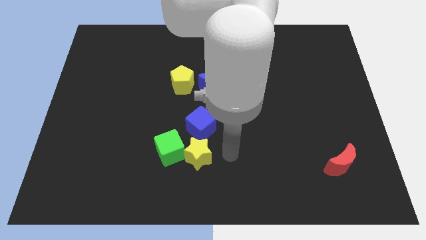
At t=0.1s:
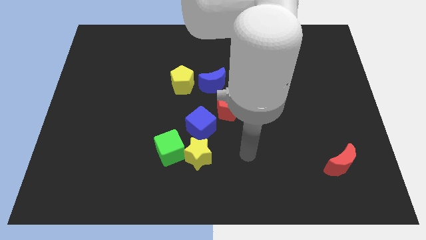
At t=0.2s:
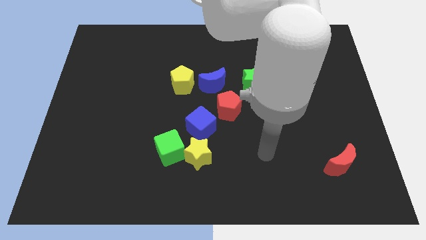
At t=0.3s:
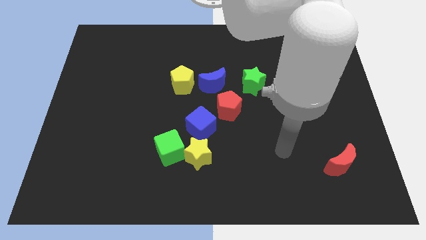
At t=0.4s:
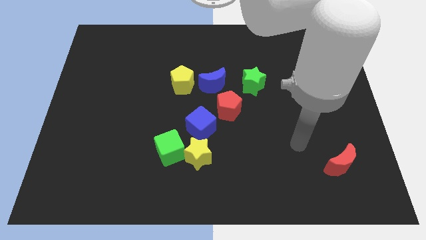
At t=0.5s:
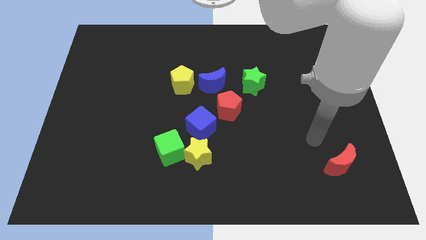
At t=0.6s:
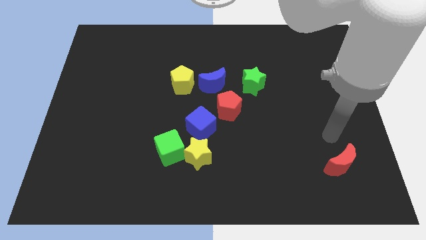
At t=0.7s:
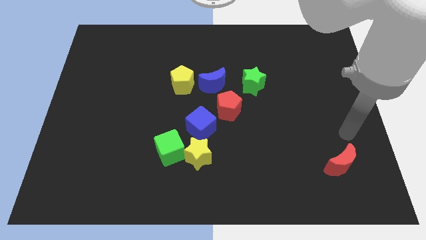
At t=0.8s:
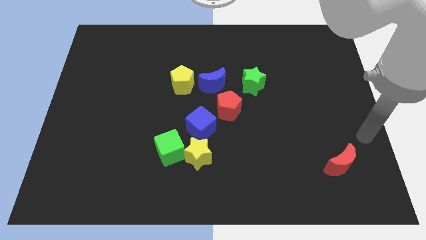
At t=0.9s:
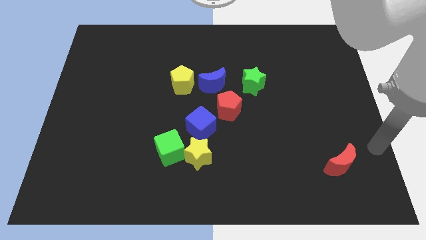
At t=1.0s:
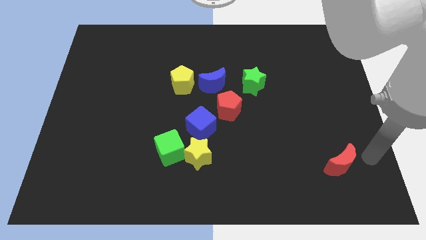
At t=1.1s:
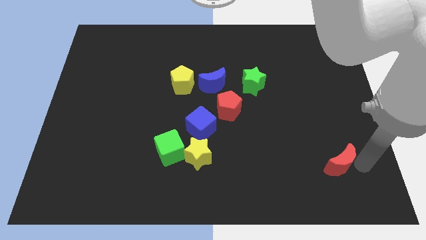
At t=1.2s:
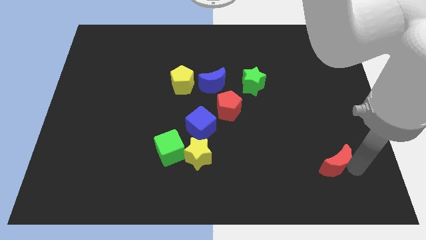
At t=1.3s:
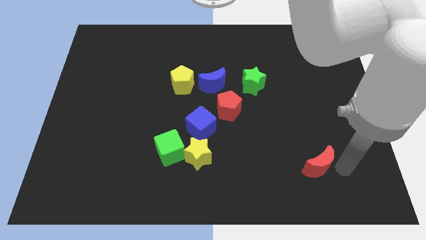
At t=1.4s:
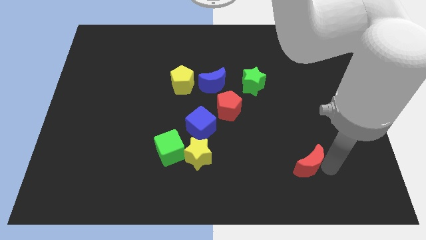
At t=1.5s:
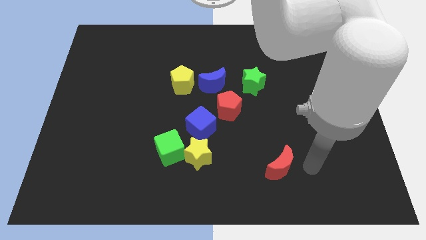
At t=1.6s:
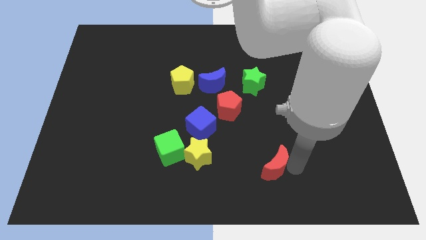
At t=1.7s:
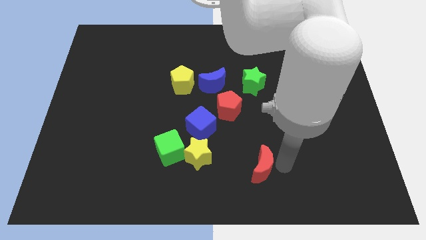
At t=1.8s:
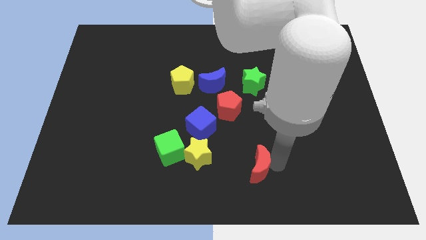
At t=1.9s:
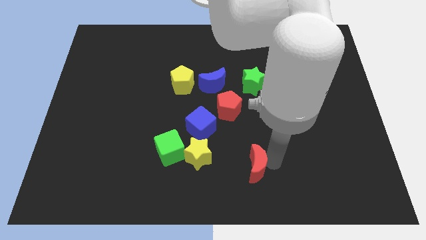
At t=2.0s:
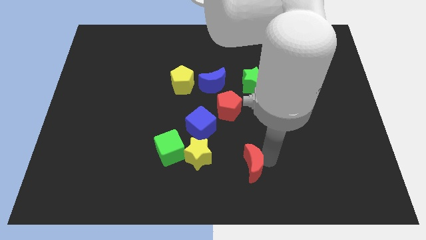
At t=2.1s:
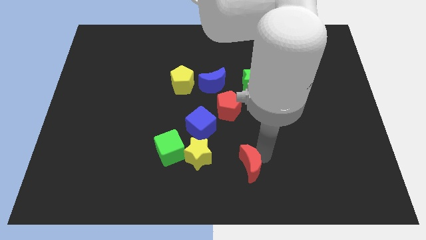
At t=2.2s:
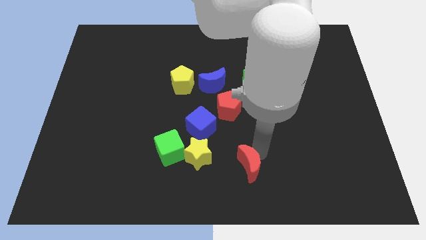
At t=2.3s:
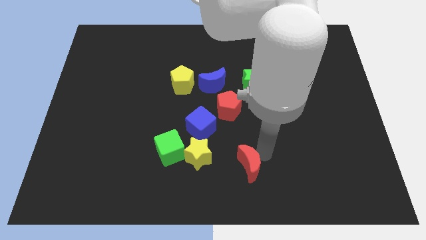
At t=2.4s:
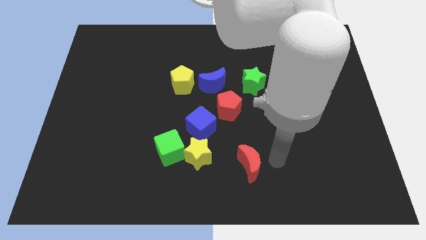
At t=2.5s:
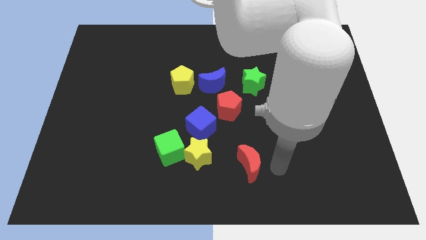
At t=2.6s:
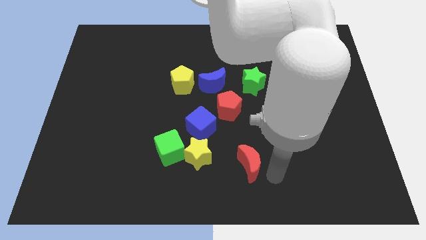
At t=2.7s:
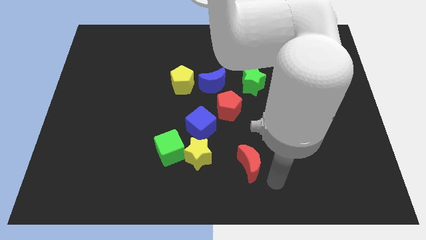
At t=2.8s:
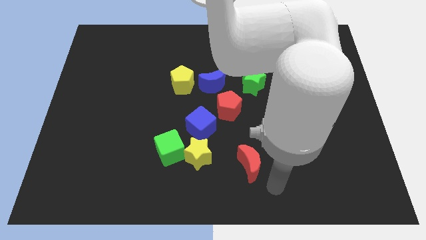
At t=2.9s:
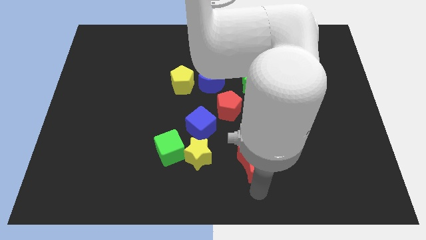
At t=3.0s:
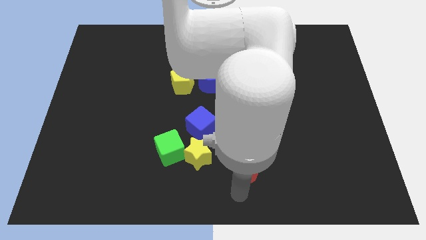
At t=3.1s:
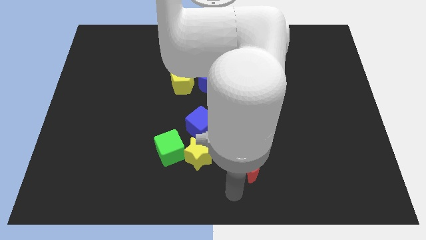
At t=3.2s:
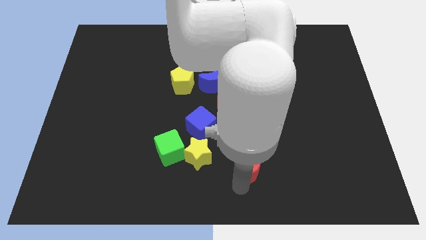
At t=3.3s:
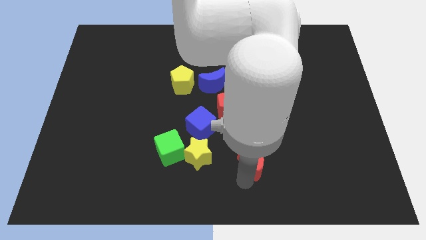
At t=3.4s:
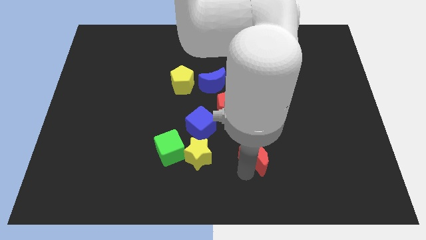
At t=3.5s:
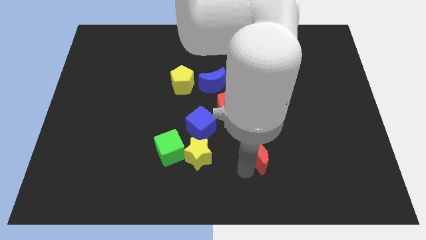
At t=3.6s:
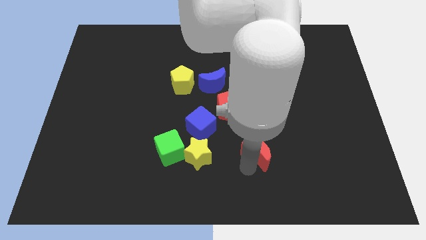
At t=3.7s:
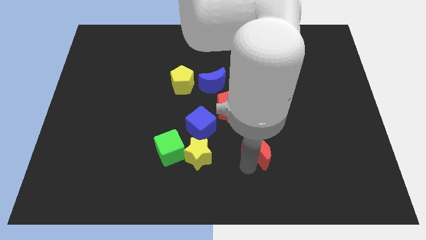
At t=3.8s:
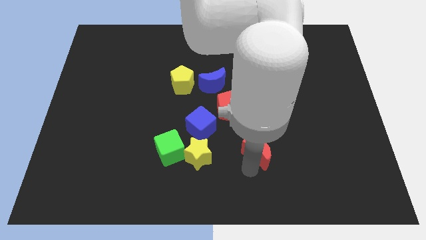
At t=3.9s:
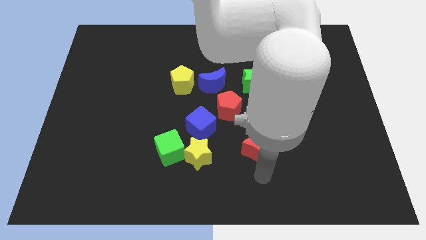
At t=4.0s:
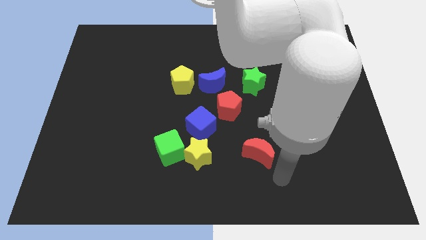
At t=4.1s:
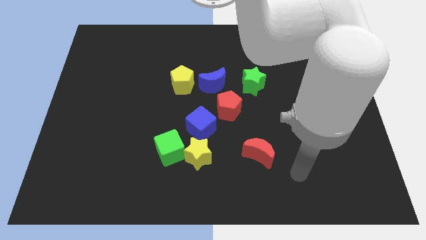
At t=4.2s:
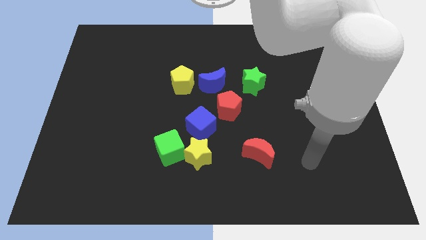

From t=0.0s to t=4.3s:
place the red moon vertically below the bottom side of the green star

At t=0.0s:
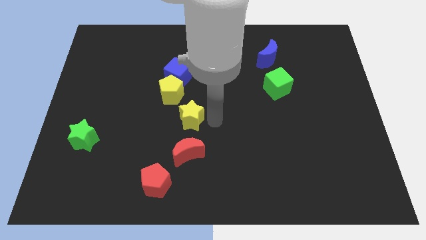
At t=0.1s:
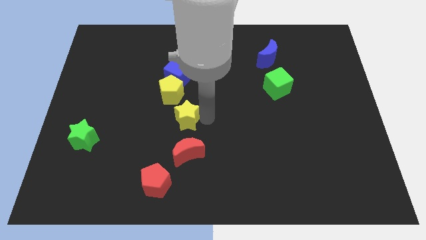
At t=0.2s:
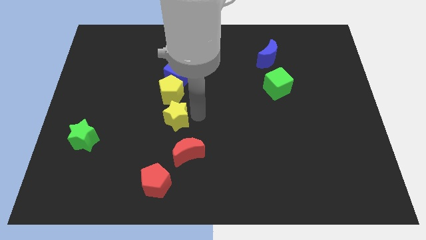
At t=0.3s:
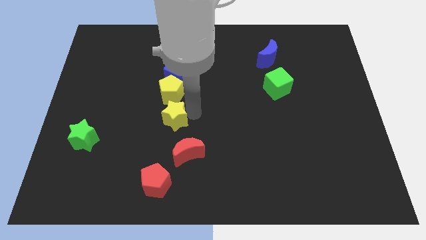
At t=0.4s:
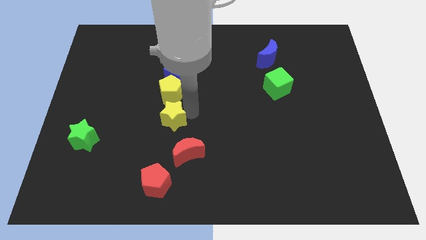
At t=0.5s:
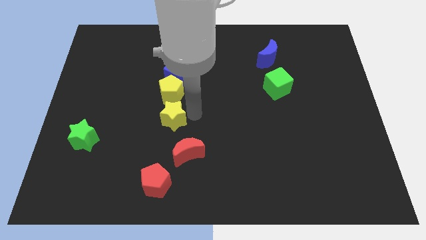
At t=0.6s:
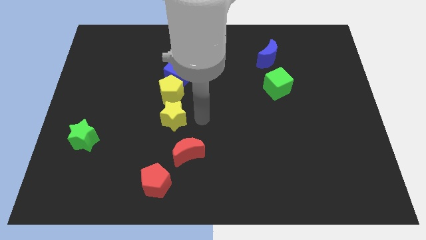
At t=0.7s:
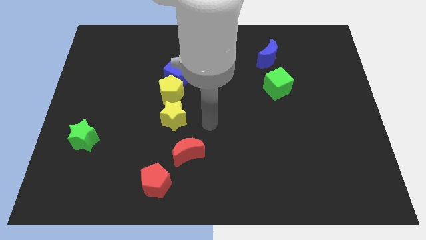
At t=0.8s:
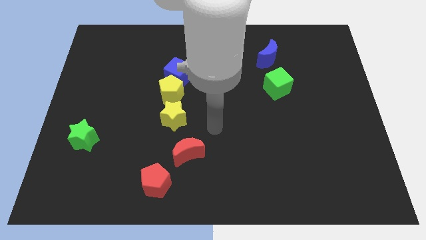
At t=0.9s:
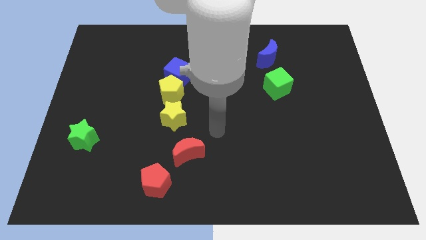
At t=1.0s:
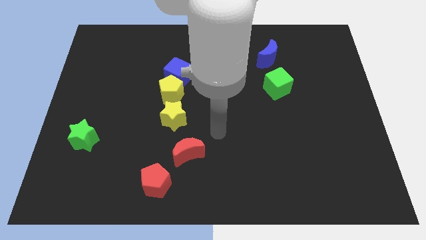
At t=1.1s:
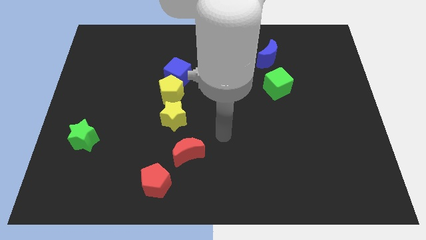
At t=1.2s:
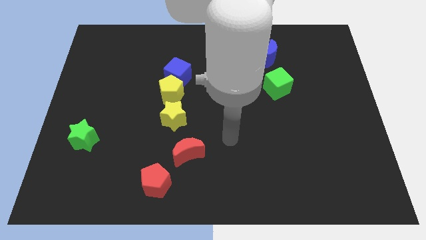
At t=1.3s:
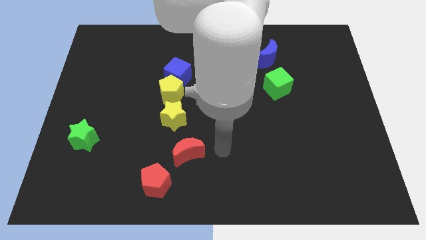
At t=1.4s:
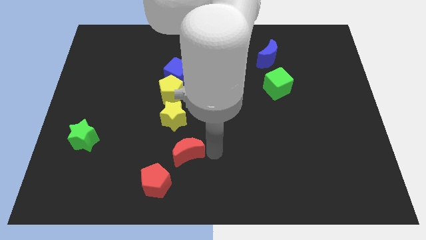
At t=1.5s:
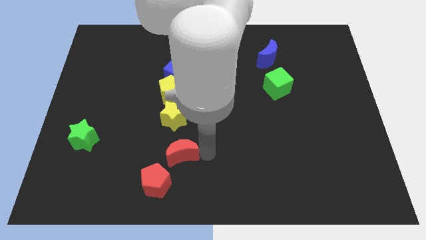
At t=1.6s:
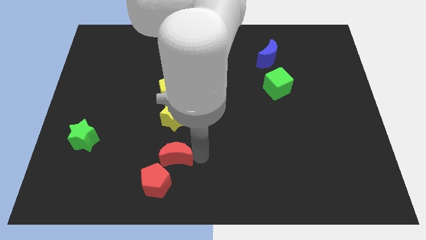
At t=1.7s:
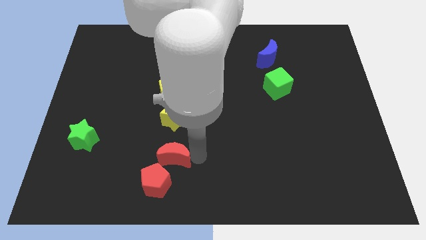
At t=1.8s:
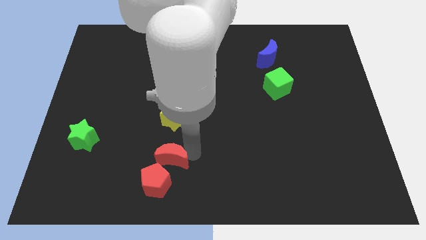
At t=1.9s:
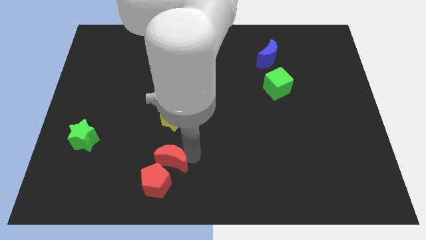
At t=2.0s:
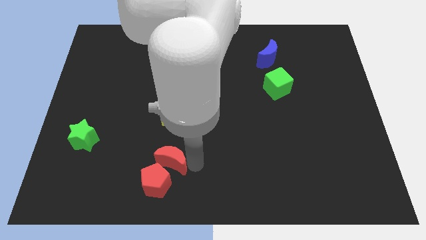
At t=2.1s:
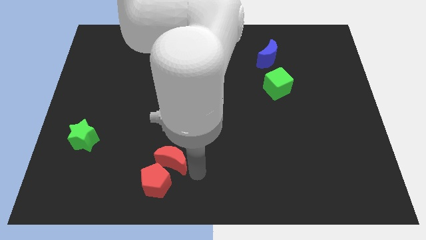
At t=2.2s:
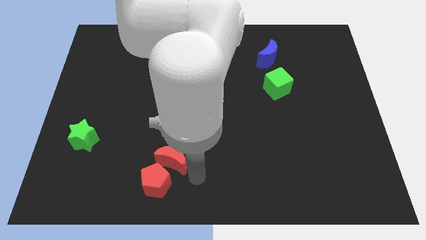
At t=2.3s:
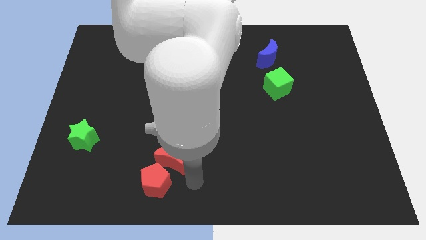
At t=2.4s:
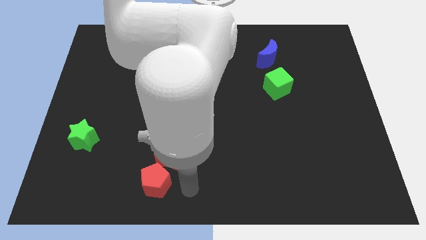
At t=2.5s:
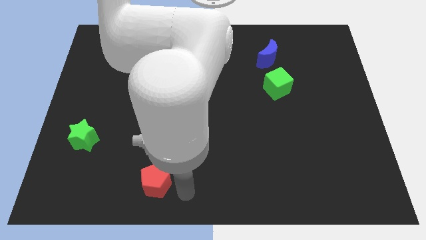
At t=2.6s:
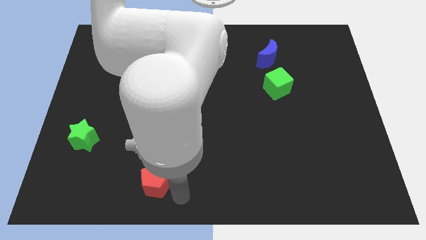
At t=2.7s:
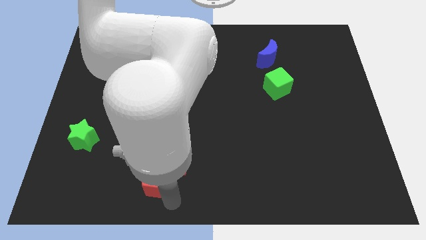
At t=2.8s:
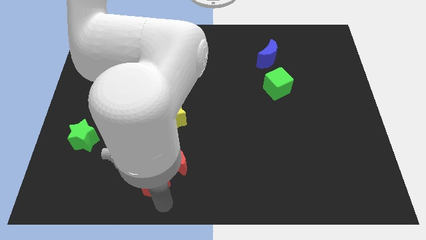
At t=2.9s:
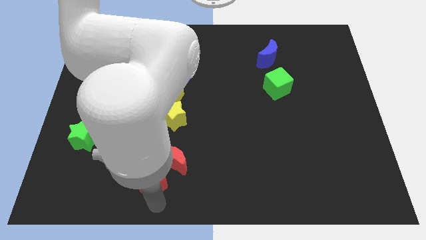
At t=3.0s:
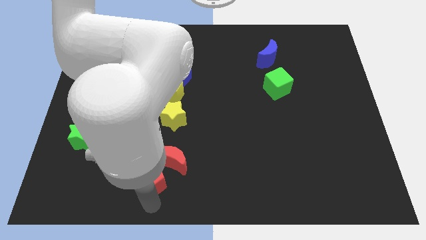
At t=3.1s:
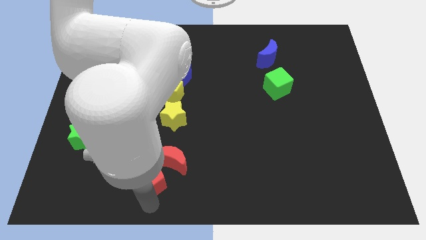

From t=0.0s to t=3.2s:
place the yellow star at the bottom of the yellow pentagon

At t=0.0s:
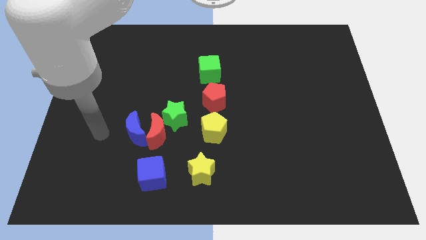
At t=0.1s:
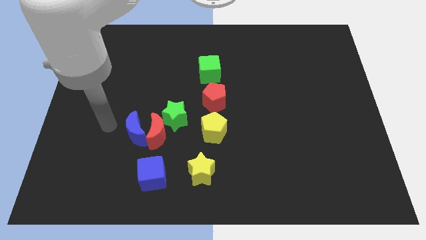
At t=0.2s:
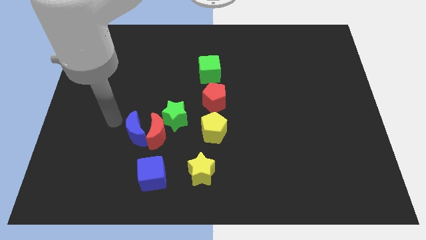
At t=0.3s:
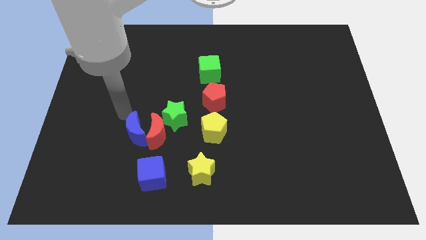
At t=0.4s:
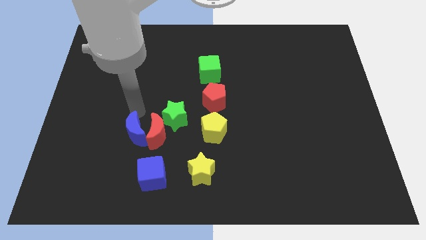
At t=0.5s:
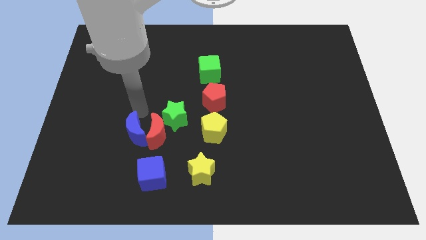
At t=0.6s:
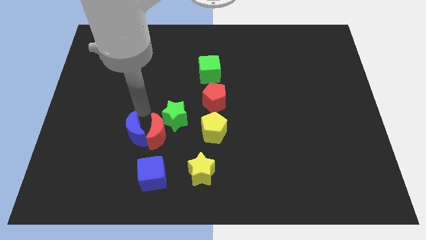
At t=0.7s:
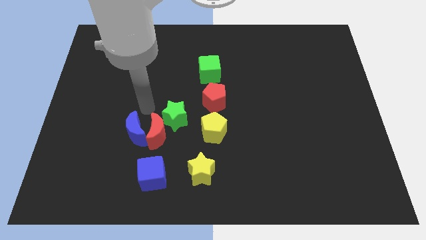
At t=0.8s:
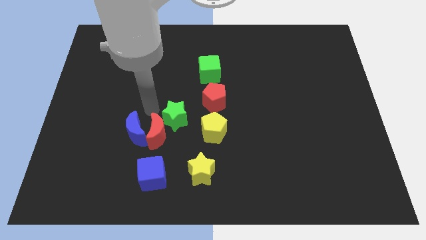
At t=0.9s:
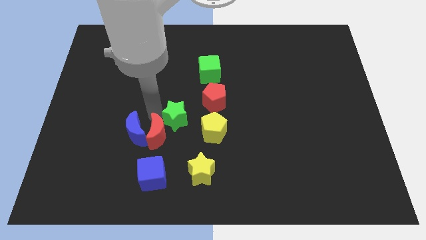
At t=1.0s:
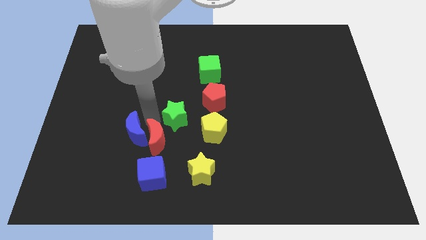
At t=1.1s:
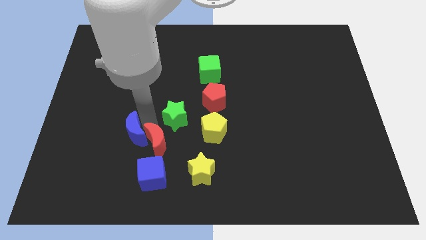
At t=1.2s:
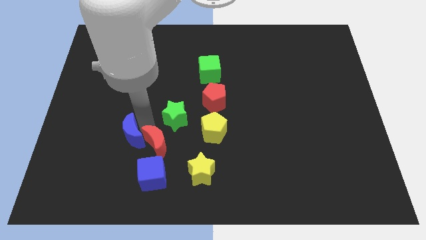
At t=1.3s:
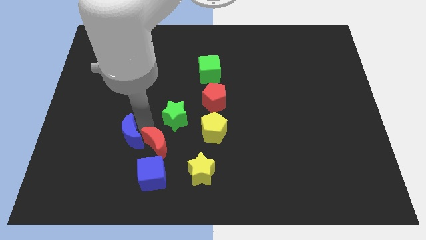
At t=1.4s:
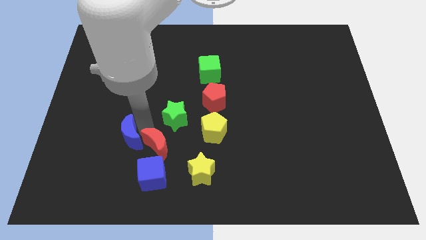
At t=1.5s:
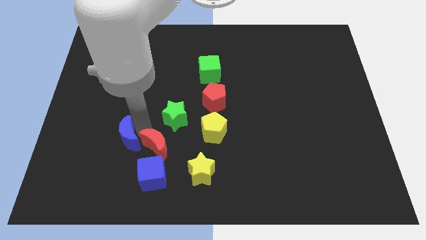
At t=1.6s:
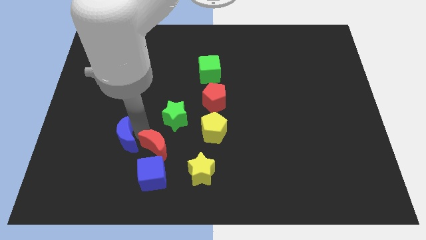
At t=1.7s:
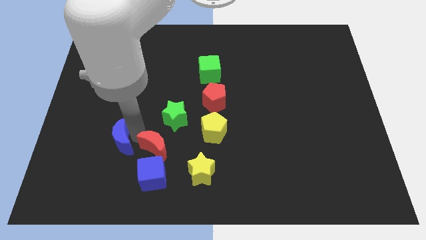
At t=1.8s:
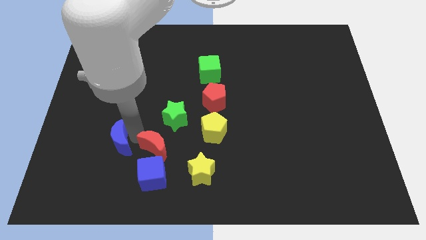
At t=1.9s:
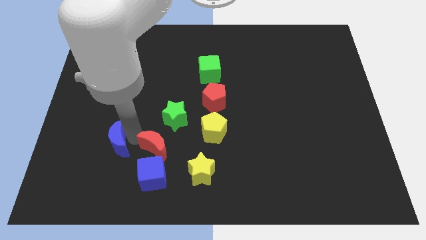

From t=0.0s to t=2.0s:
separate the blue crescent from red crescent
